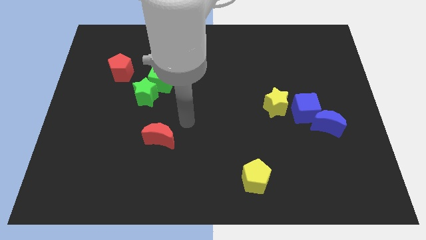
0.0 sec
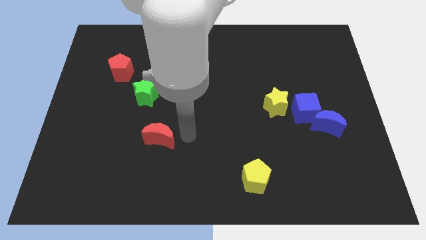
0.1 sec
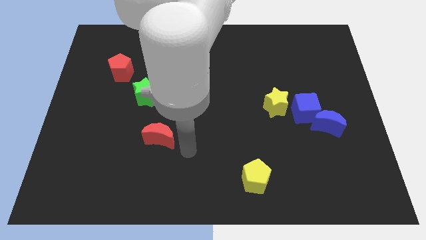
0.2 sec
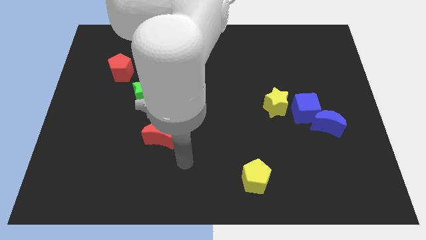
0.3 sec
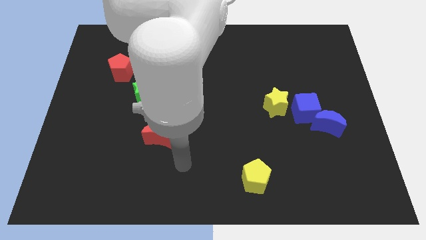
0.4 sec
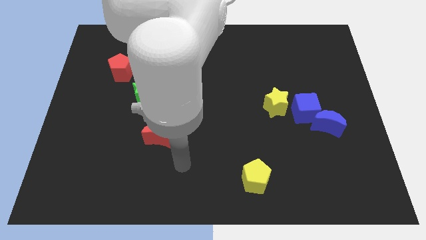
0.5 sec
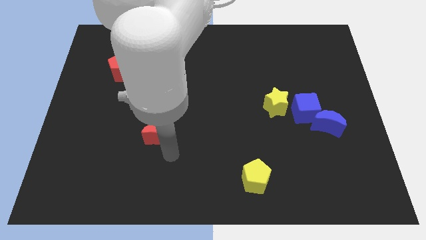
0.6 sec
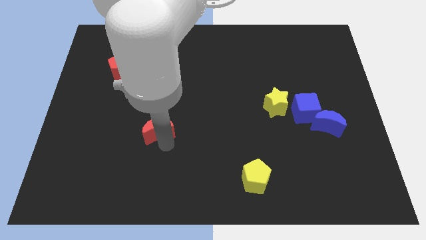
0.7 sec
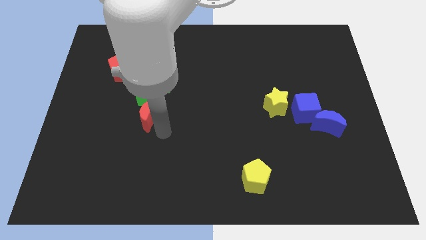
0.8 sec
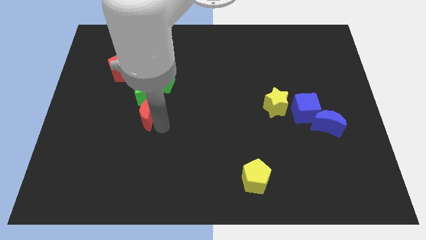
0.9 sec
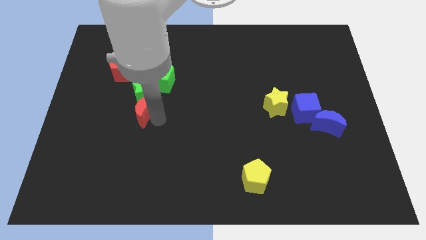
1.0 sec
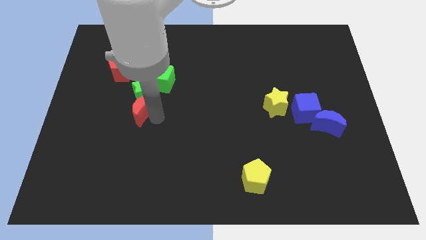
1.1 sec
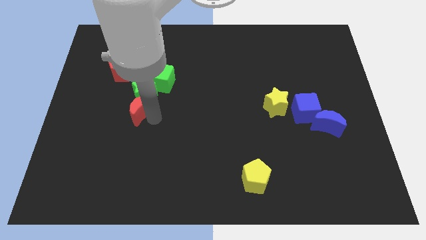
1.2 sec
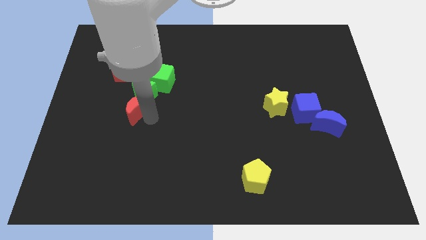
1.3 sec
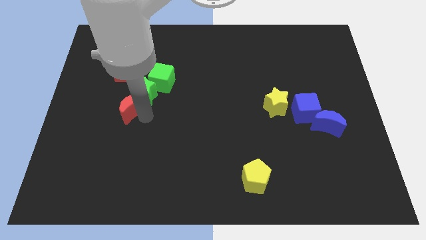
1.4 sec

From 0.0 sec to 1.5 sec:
push the red crescent into the green star

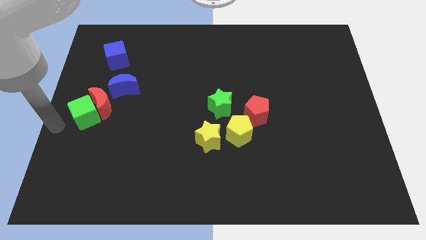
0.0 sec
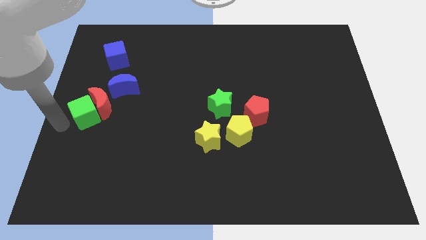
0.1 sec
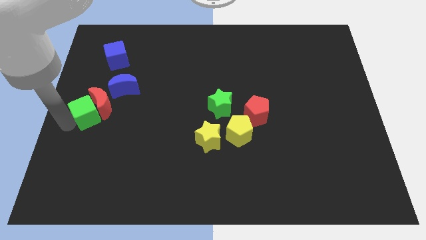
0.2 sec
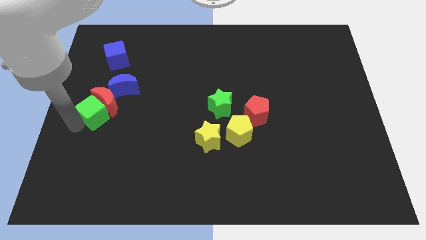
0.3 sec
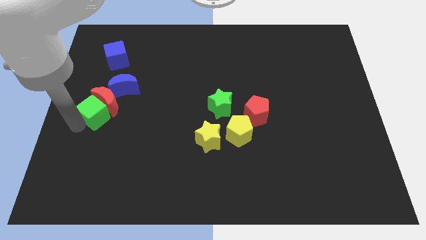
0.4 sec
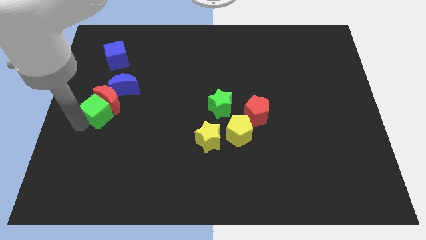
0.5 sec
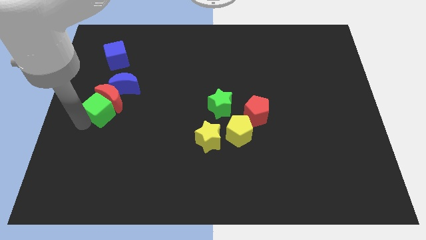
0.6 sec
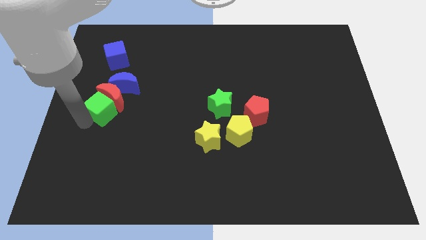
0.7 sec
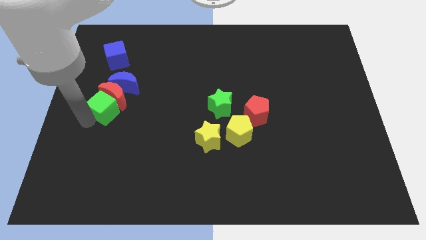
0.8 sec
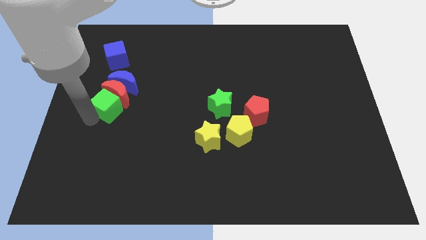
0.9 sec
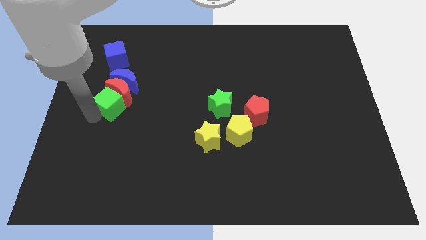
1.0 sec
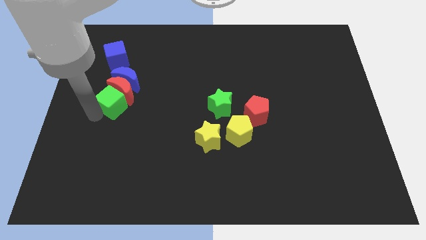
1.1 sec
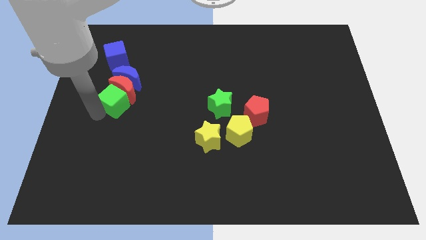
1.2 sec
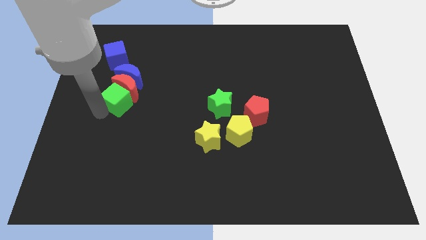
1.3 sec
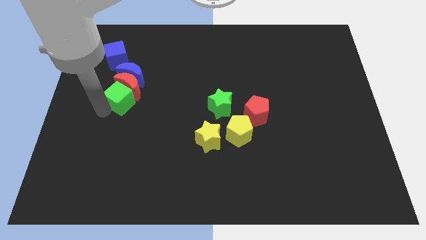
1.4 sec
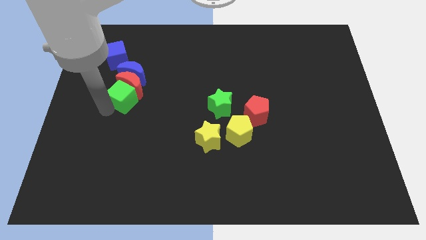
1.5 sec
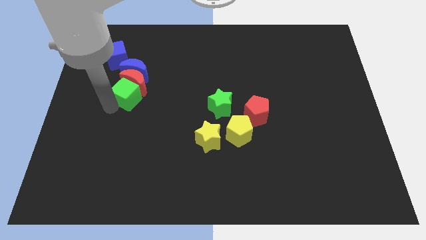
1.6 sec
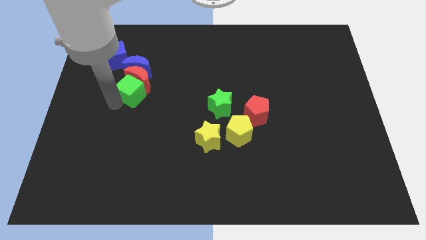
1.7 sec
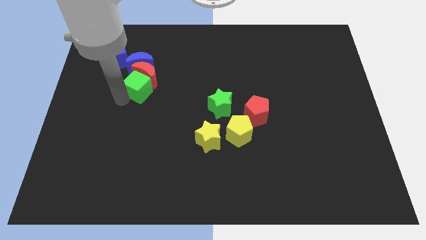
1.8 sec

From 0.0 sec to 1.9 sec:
push the red crescent and green cube towards blue crescent

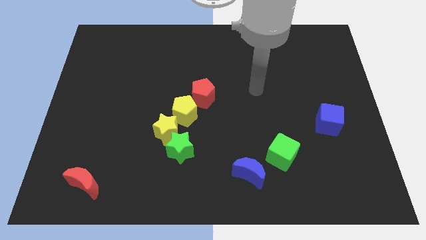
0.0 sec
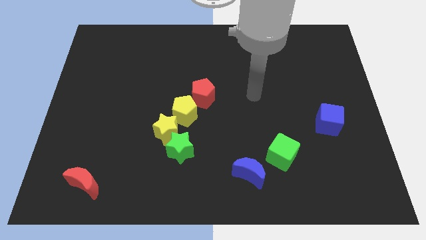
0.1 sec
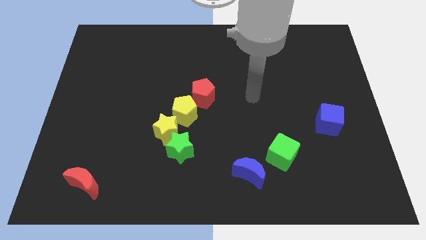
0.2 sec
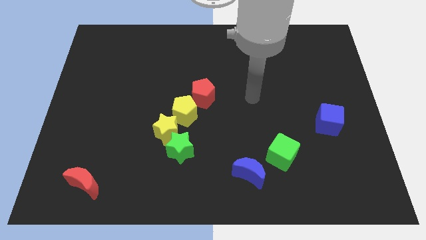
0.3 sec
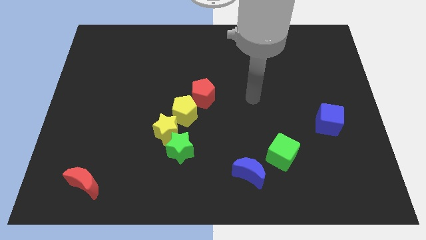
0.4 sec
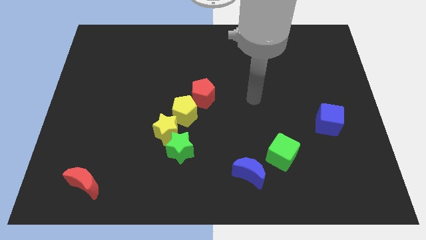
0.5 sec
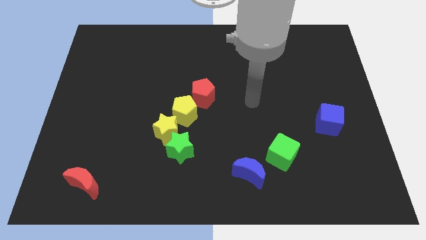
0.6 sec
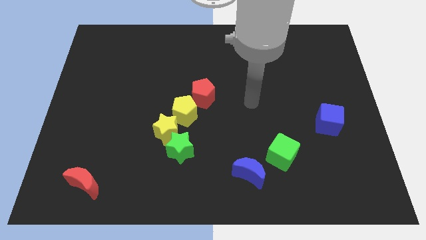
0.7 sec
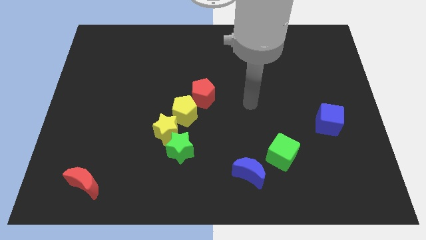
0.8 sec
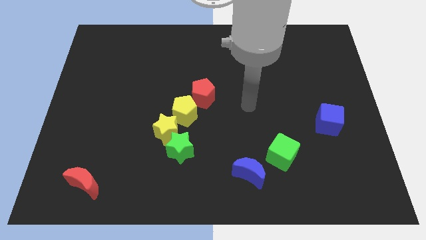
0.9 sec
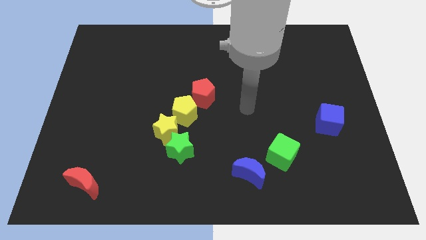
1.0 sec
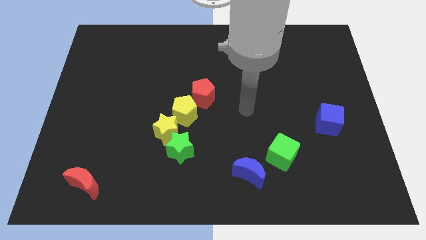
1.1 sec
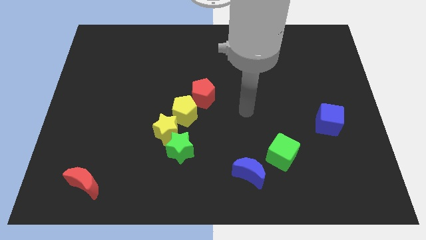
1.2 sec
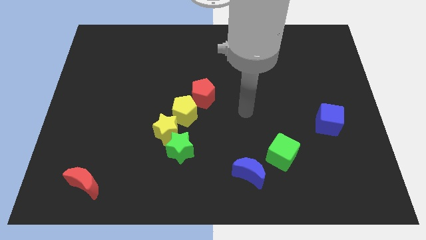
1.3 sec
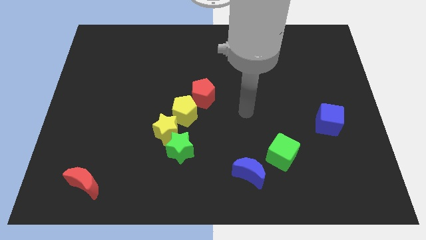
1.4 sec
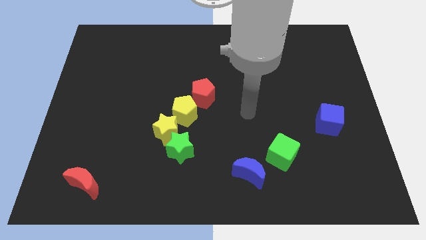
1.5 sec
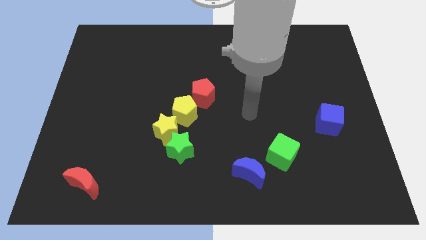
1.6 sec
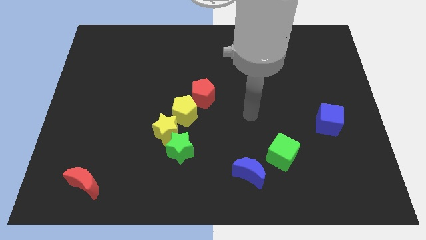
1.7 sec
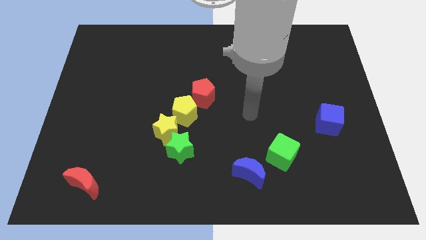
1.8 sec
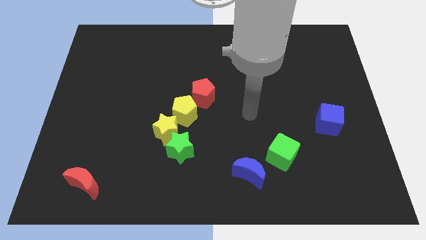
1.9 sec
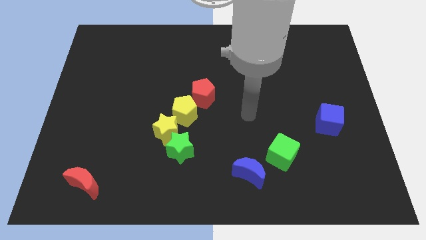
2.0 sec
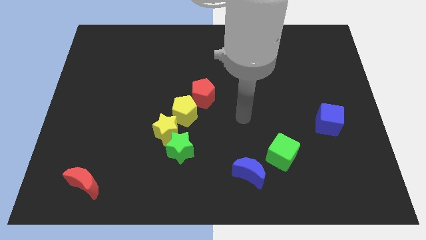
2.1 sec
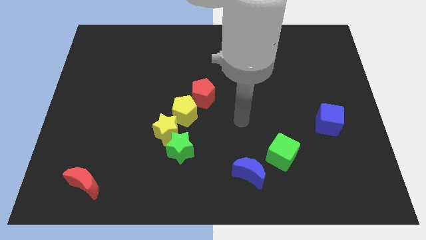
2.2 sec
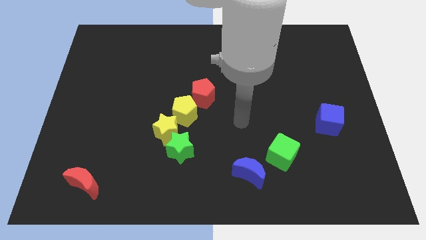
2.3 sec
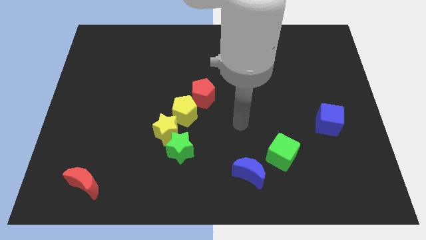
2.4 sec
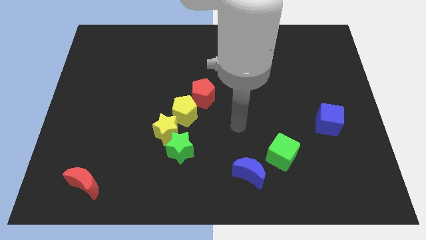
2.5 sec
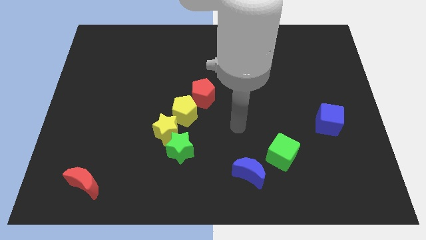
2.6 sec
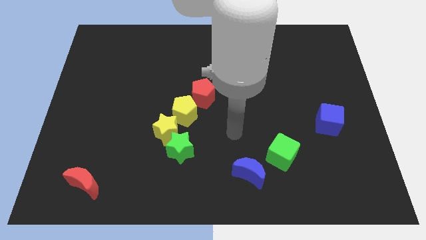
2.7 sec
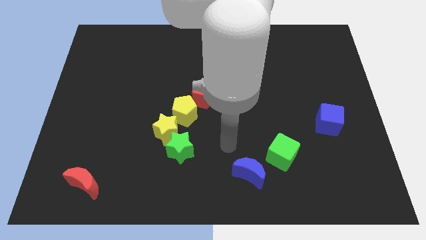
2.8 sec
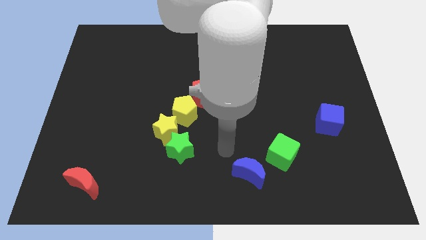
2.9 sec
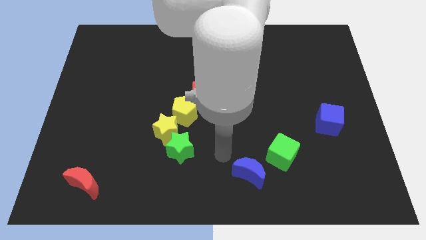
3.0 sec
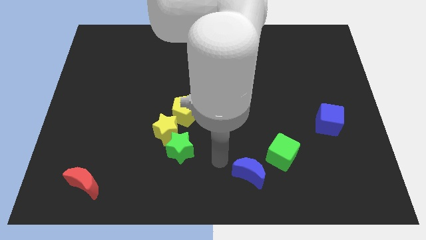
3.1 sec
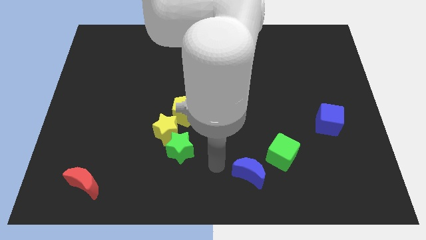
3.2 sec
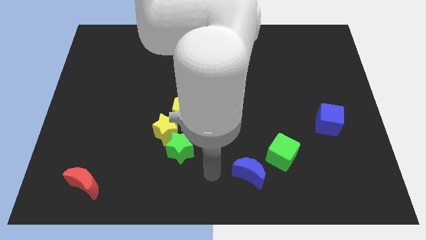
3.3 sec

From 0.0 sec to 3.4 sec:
move arm to the bottom center

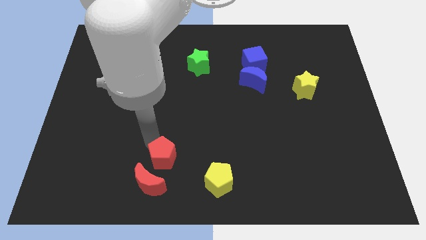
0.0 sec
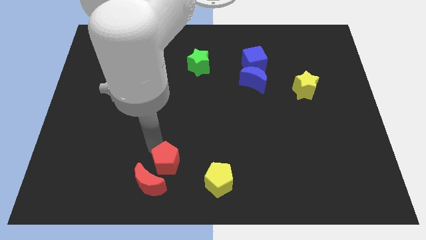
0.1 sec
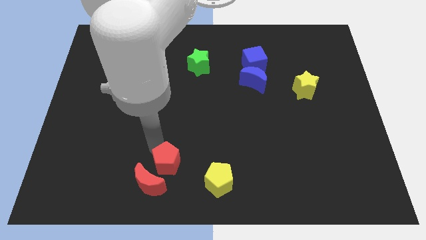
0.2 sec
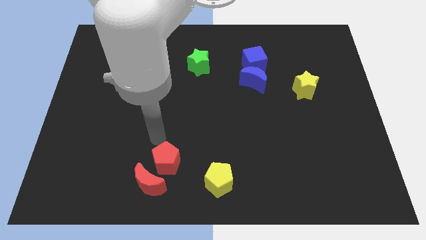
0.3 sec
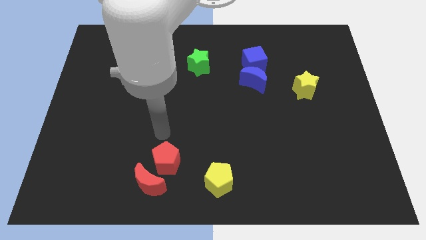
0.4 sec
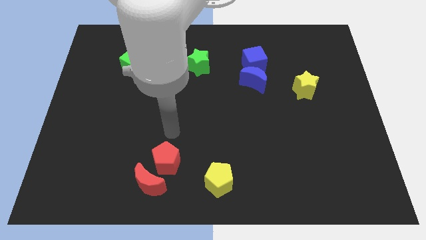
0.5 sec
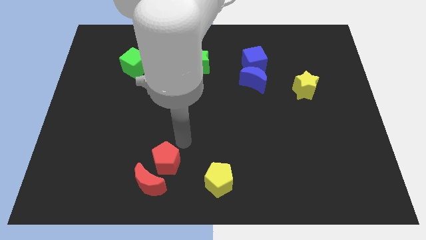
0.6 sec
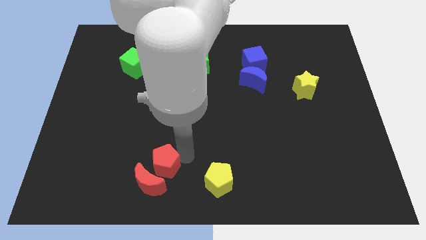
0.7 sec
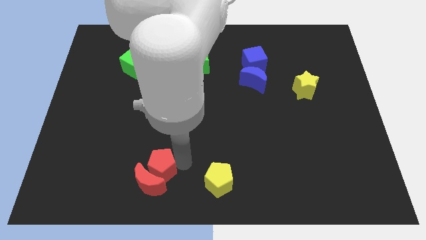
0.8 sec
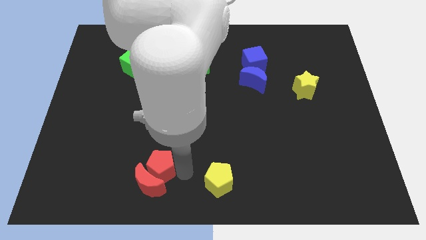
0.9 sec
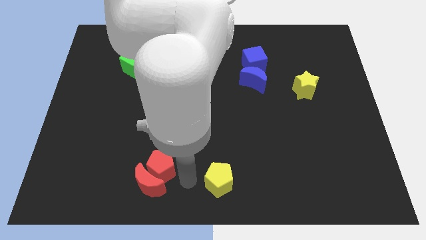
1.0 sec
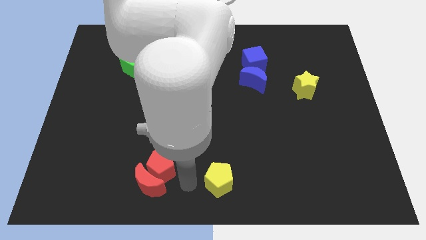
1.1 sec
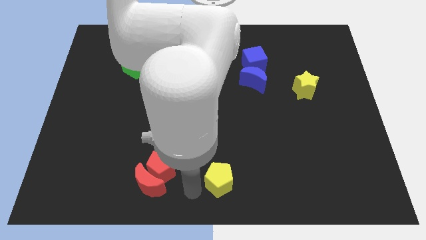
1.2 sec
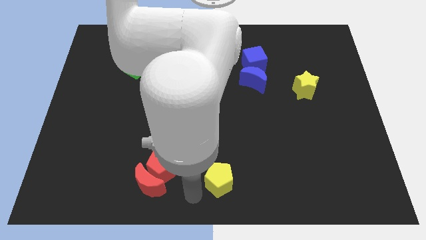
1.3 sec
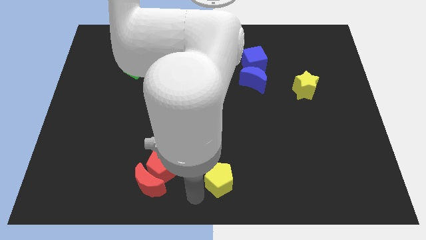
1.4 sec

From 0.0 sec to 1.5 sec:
place the arm diagonally to the yellow pentagon

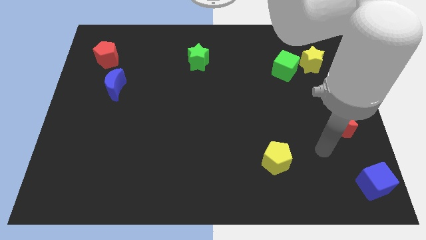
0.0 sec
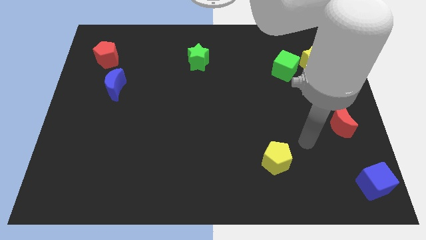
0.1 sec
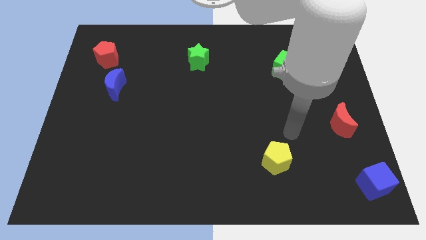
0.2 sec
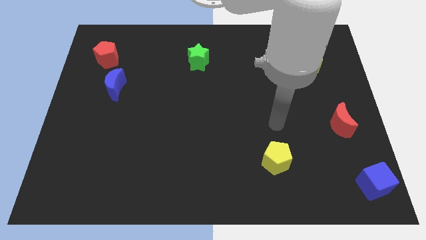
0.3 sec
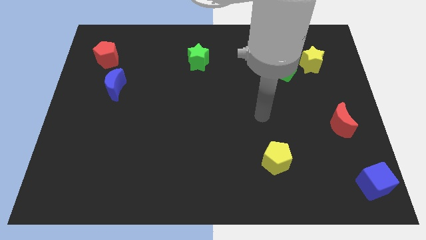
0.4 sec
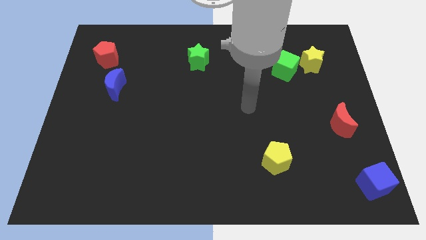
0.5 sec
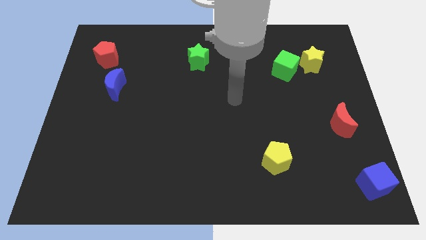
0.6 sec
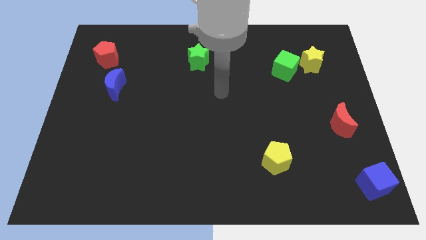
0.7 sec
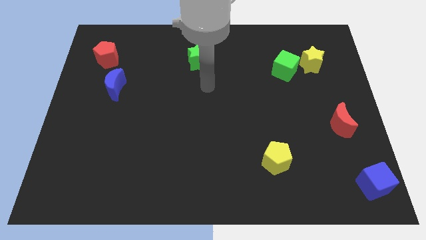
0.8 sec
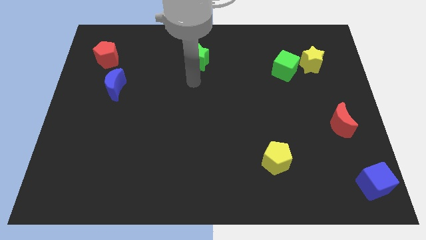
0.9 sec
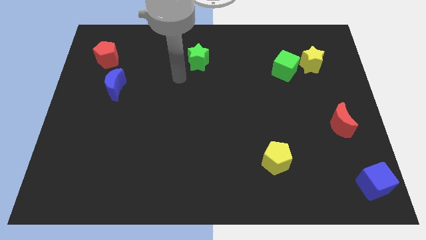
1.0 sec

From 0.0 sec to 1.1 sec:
point your arm at the bottom of the green star
